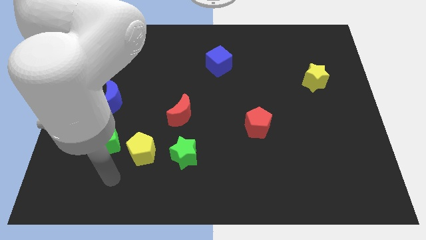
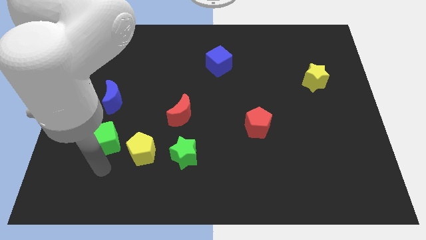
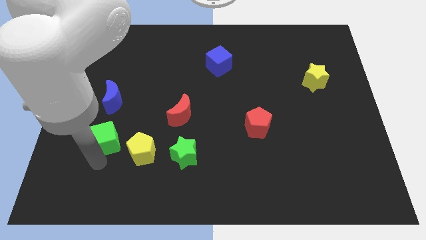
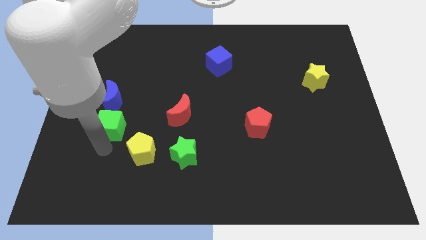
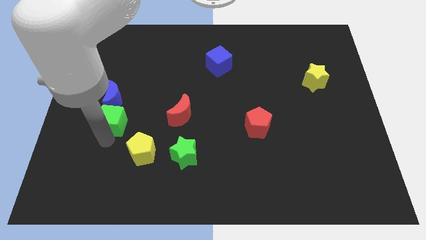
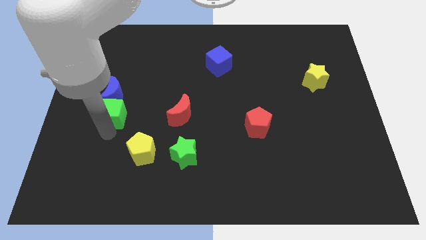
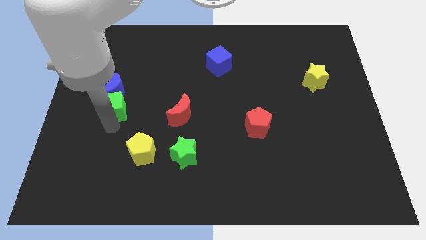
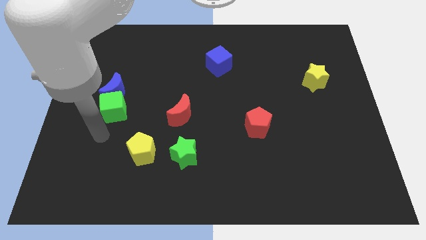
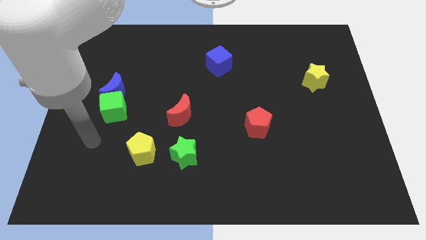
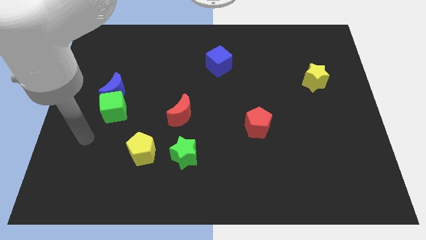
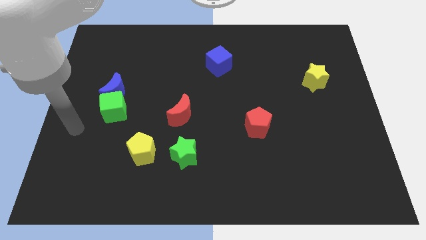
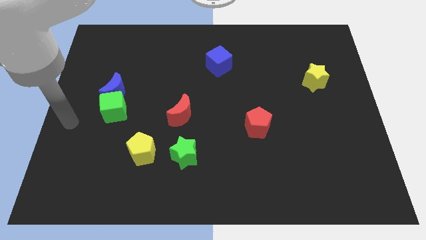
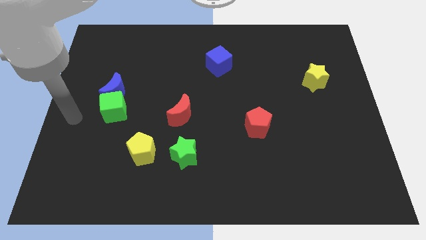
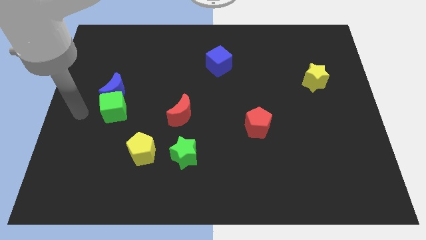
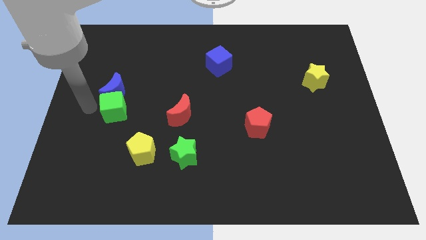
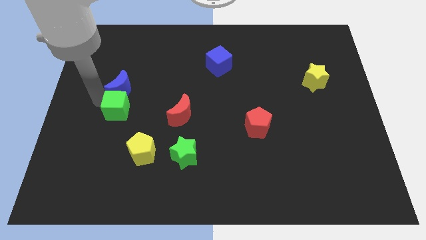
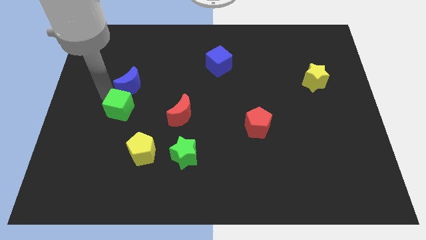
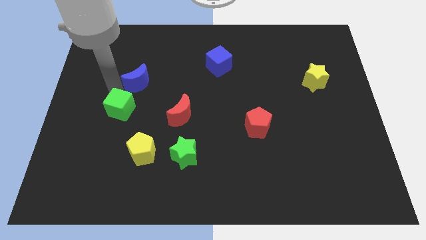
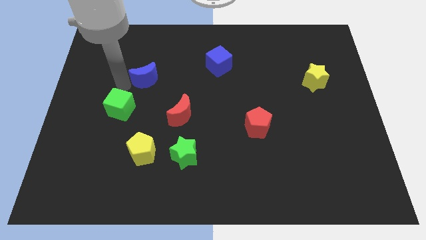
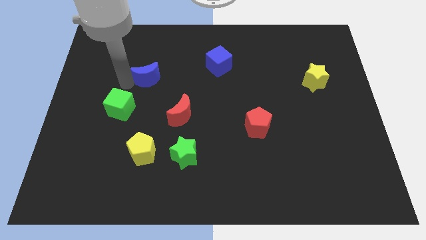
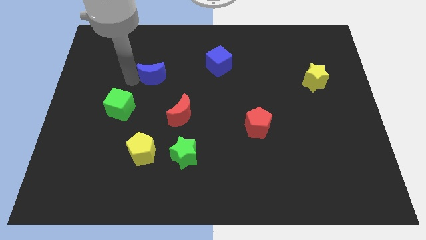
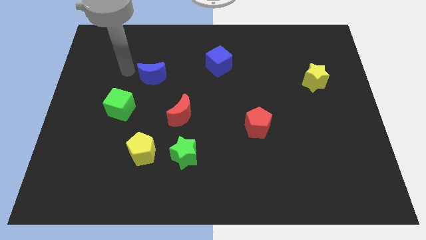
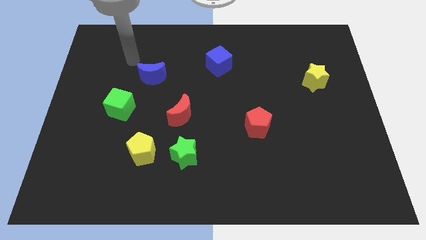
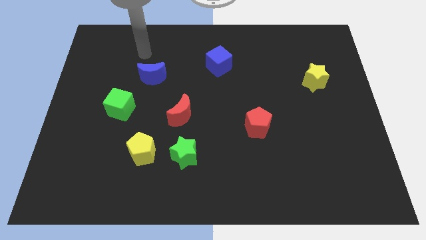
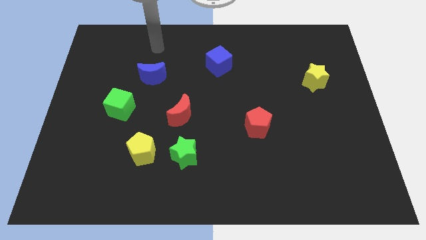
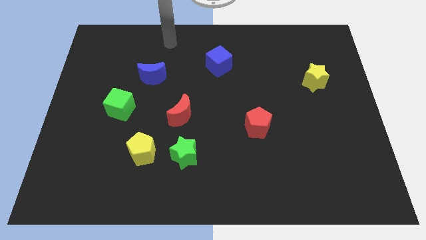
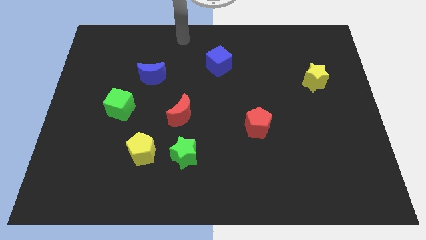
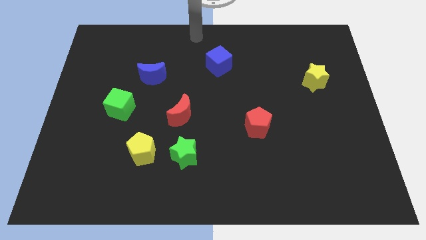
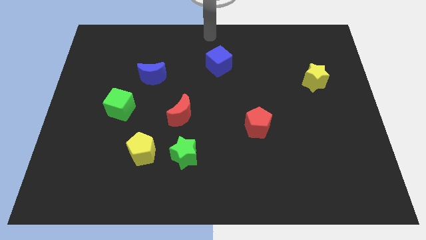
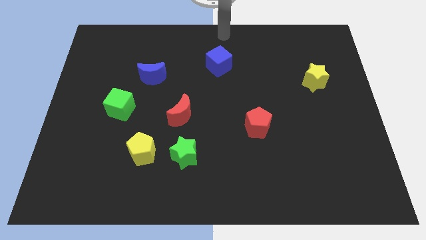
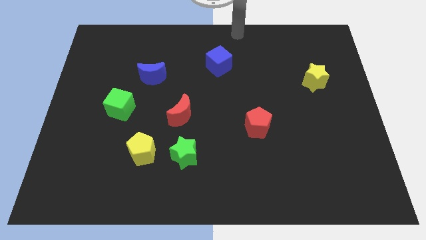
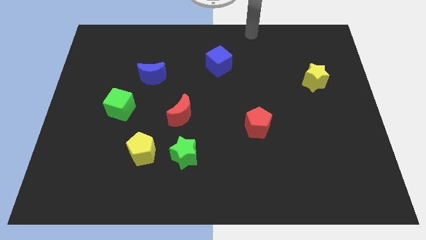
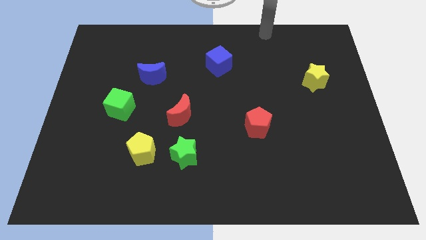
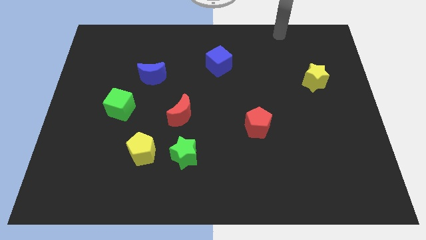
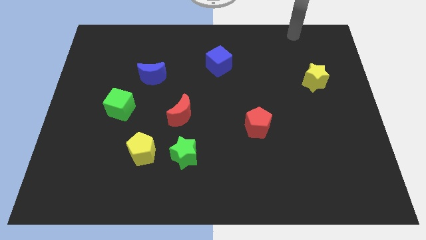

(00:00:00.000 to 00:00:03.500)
make a triangle with the help of green cube blue moon and red crescent

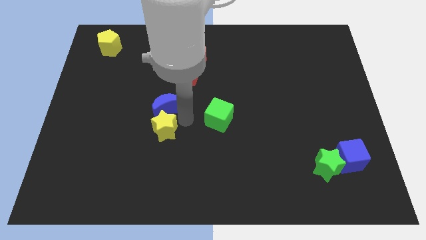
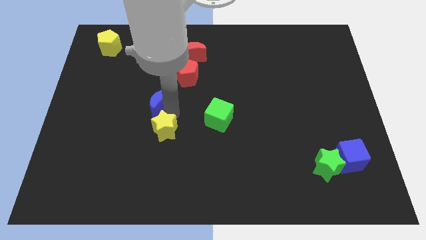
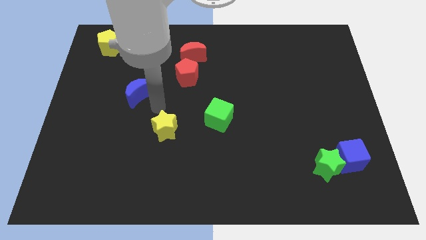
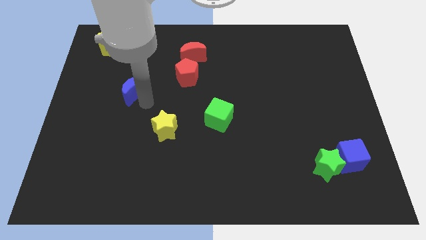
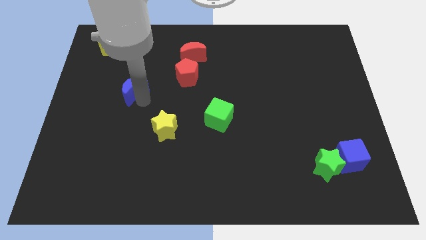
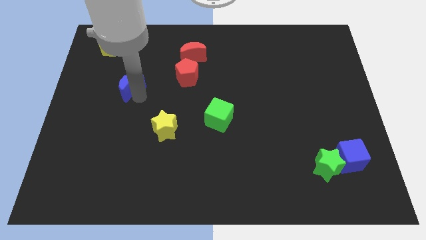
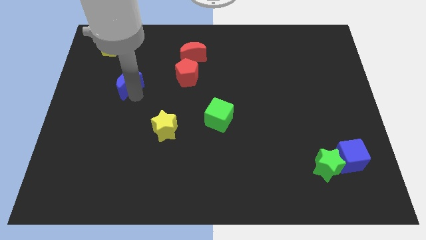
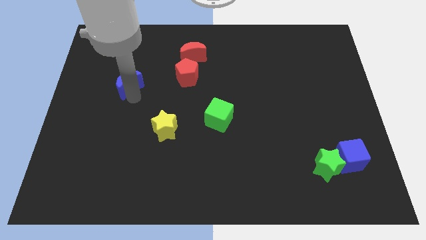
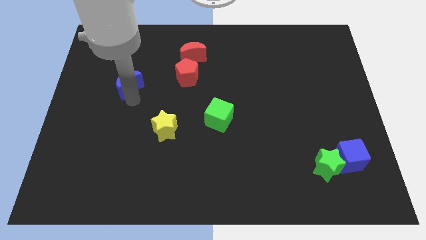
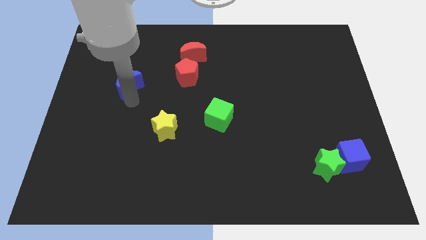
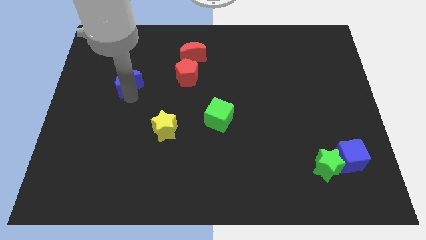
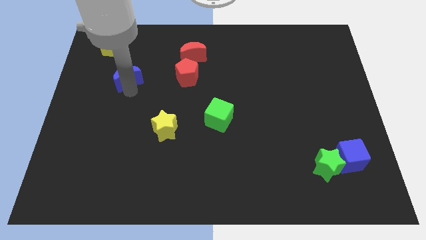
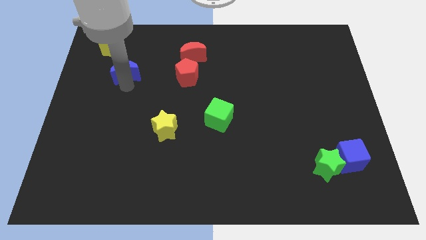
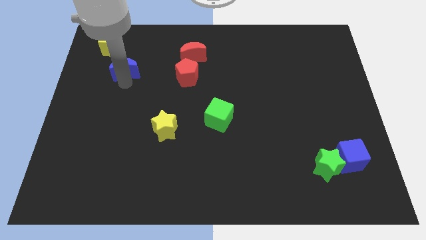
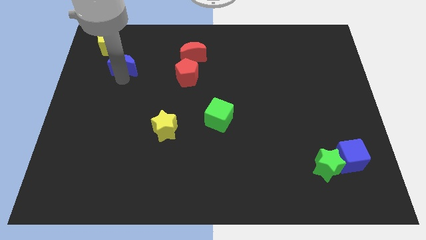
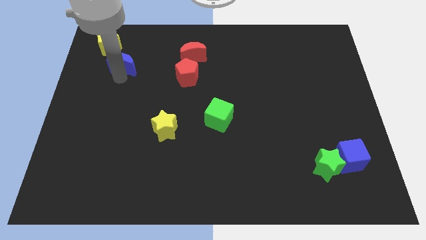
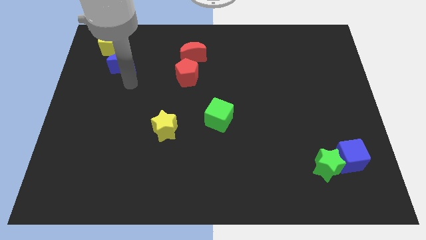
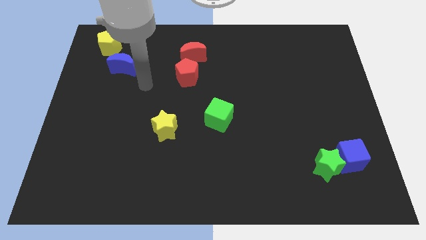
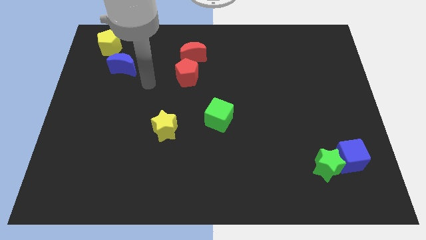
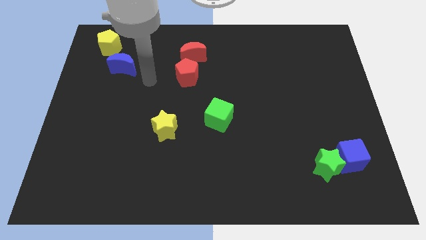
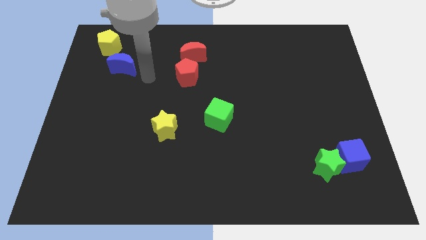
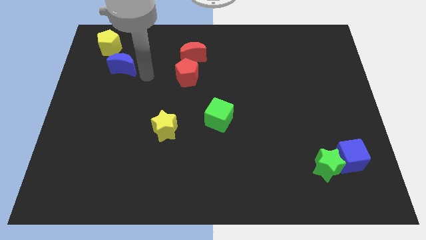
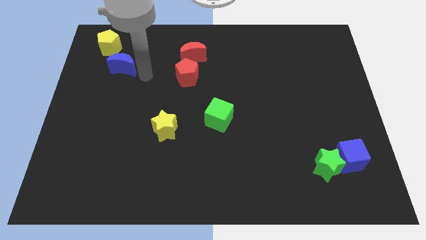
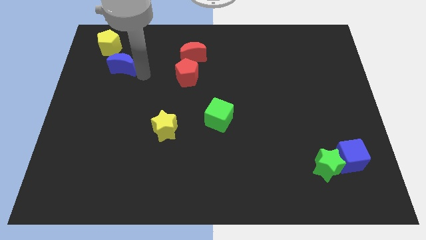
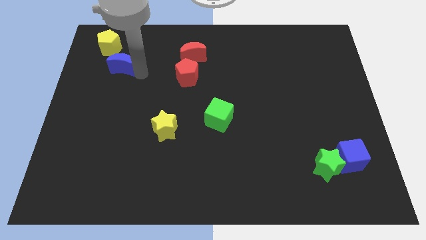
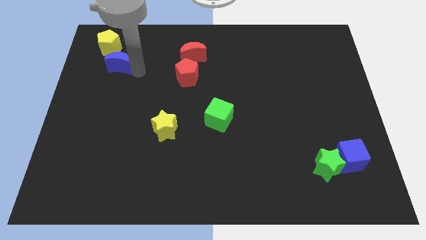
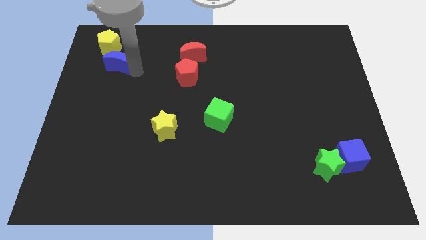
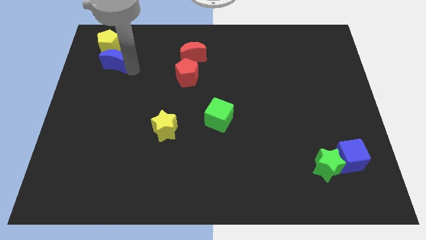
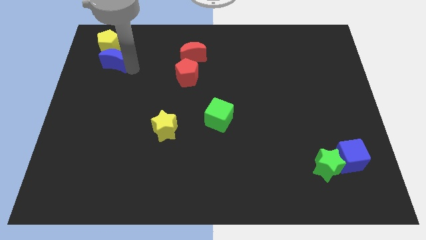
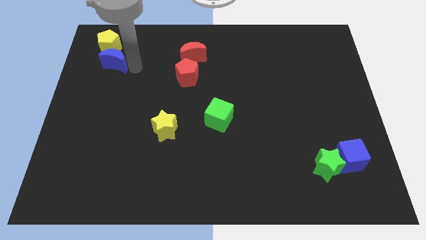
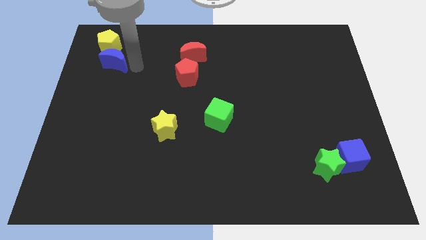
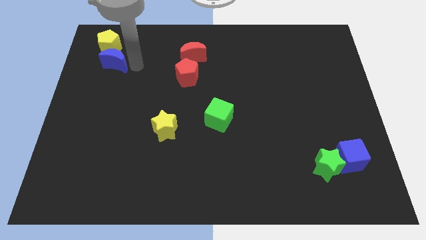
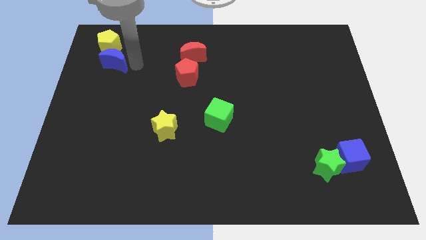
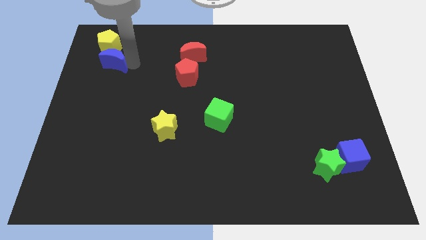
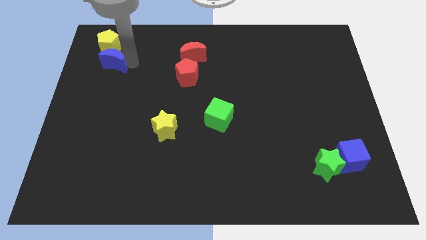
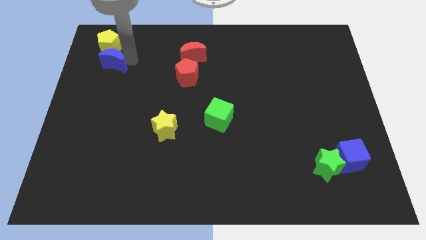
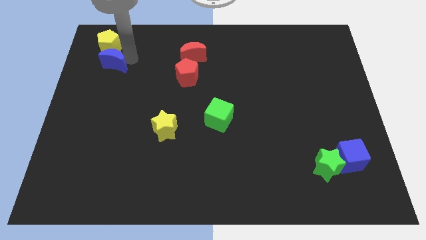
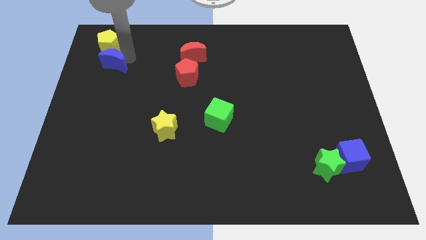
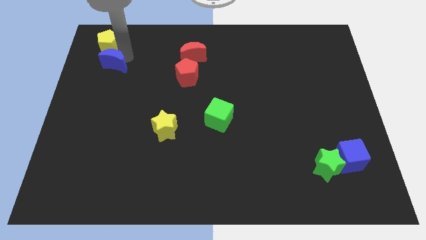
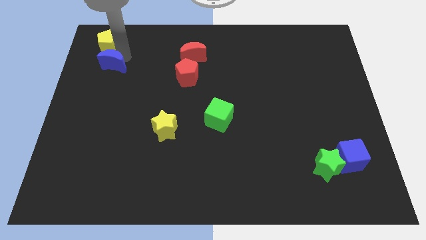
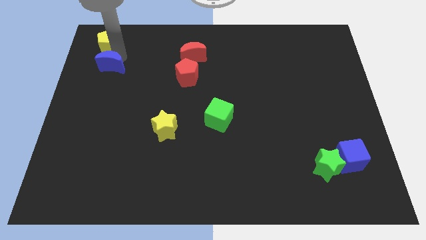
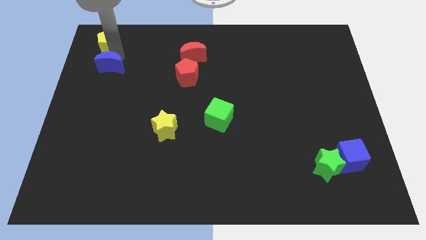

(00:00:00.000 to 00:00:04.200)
place the blue crescent below yellow pentagon

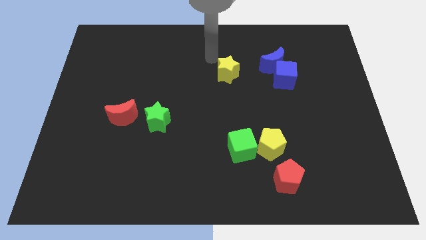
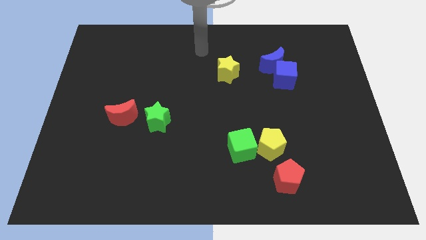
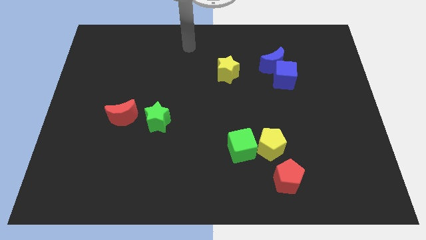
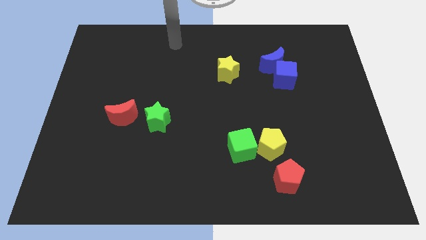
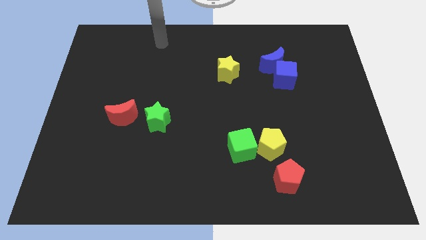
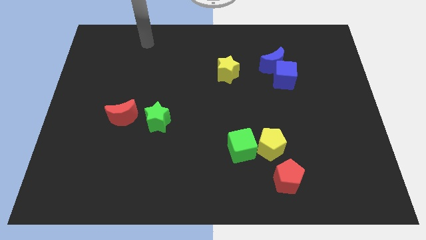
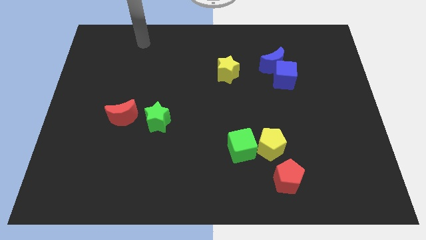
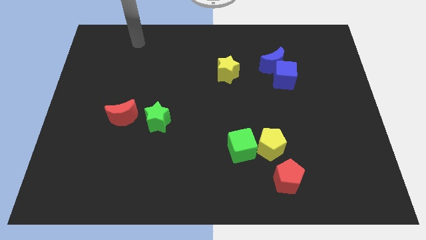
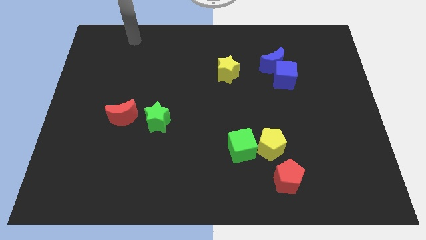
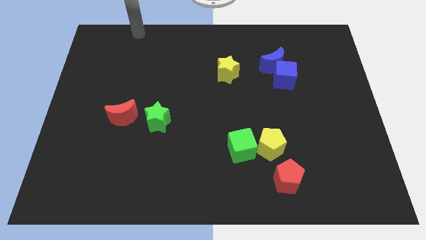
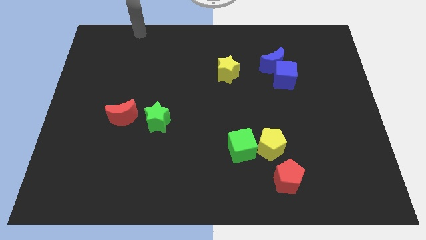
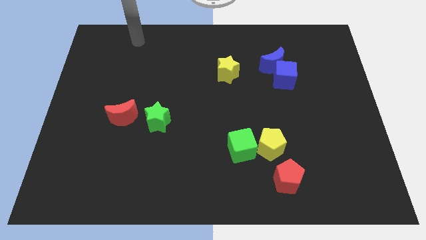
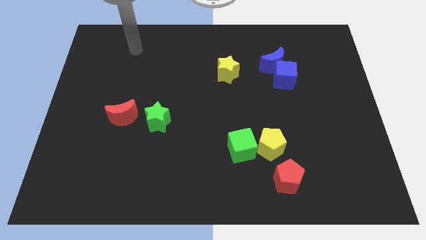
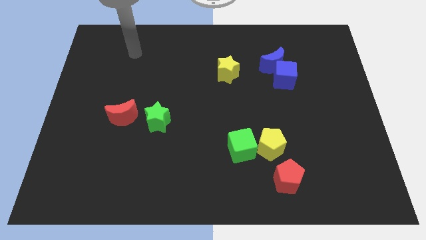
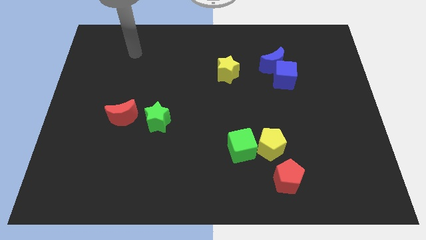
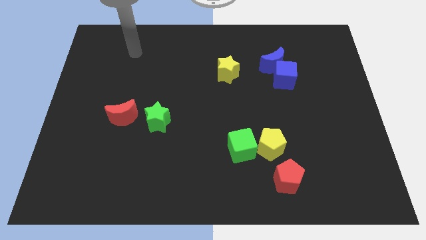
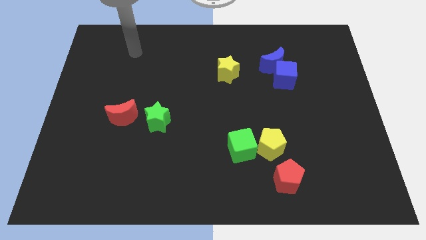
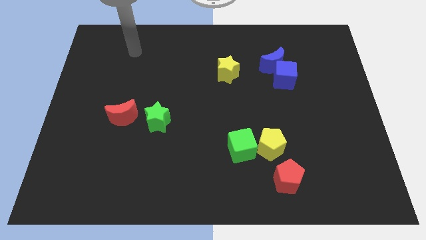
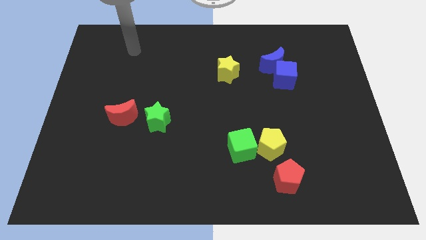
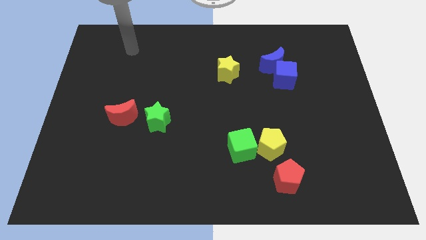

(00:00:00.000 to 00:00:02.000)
slide your hand towards the top left
